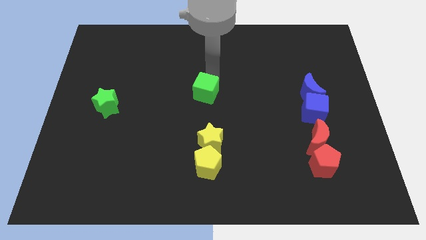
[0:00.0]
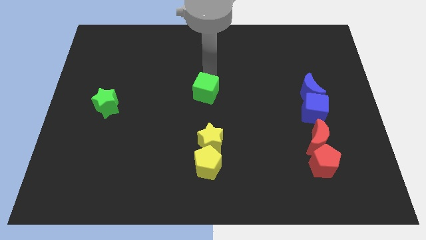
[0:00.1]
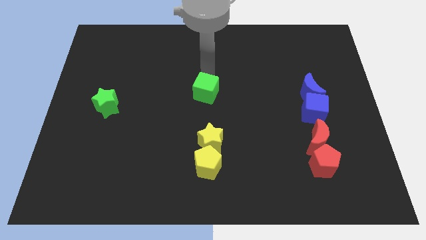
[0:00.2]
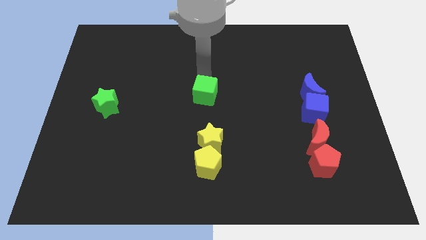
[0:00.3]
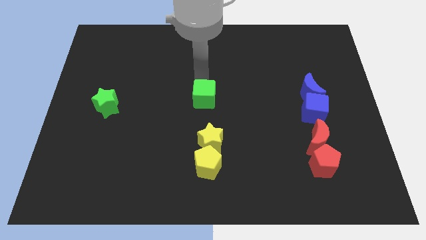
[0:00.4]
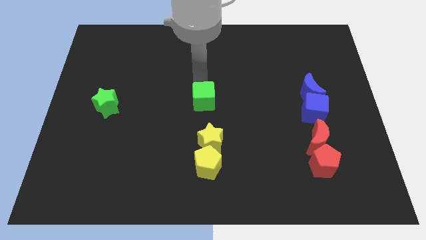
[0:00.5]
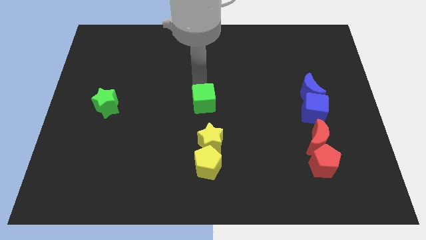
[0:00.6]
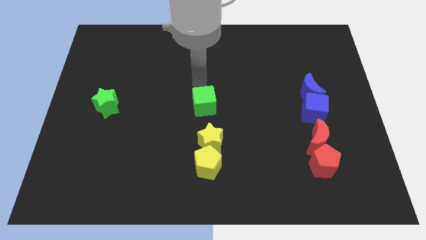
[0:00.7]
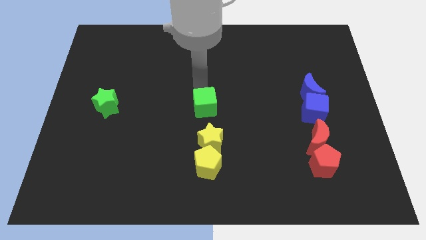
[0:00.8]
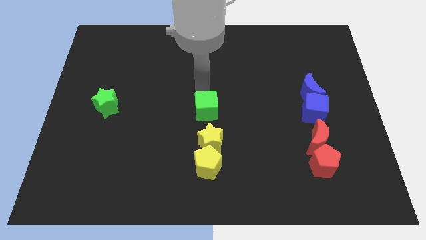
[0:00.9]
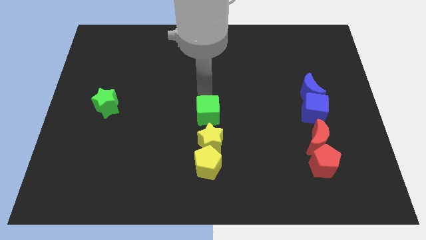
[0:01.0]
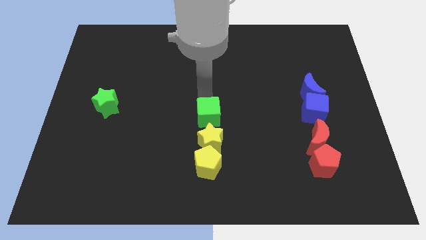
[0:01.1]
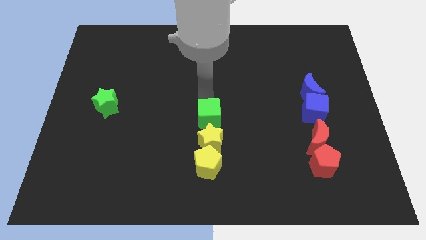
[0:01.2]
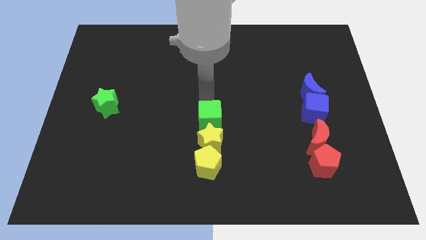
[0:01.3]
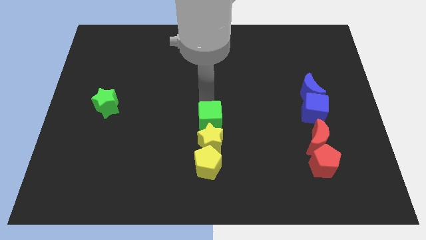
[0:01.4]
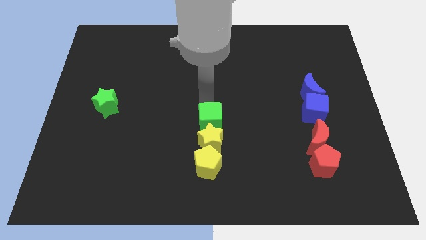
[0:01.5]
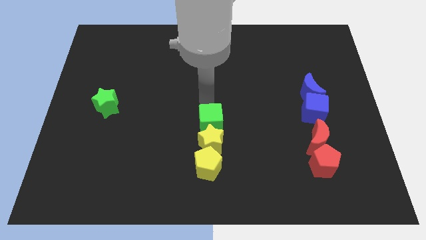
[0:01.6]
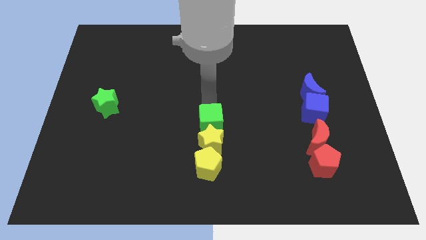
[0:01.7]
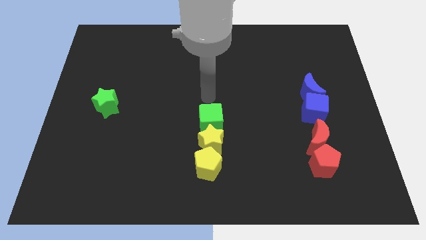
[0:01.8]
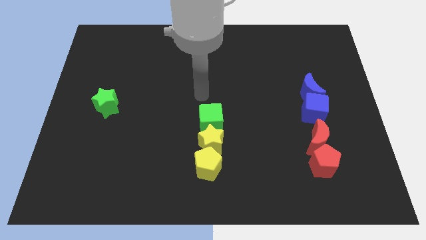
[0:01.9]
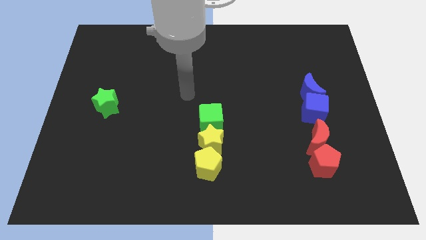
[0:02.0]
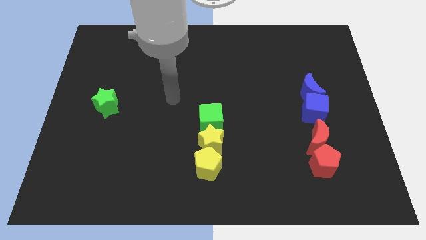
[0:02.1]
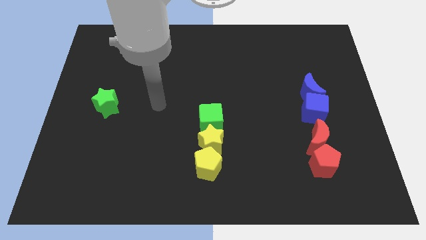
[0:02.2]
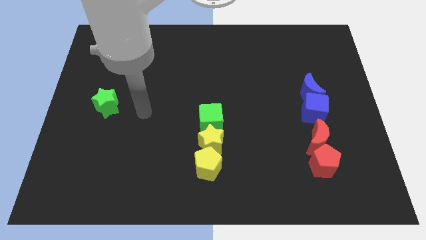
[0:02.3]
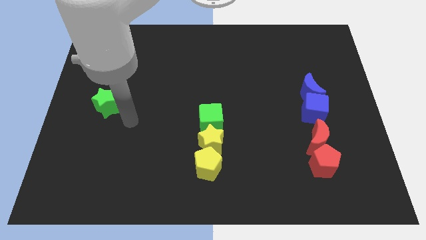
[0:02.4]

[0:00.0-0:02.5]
move the green cube near to the yellow star

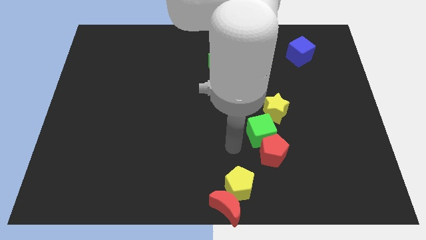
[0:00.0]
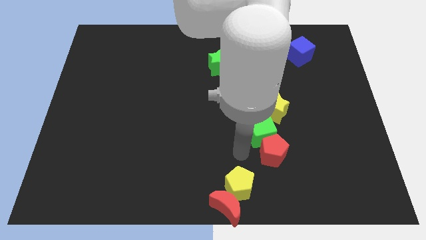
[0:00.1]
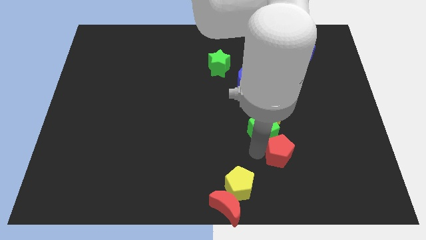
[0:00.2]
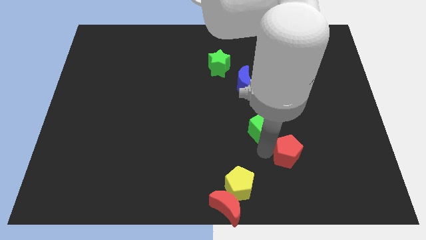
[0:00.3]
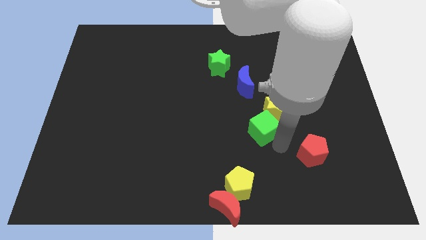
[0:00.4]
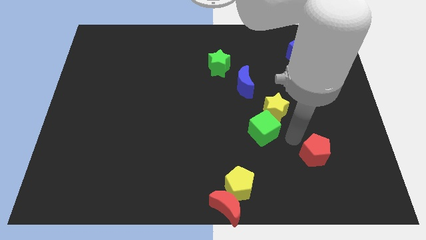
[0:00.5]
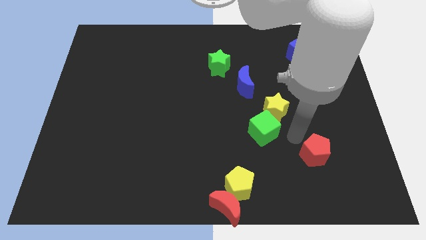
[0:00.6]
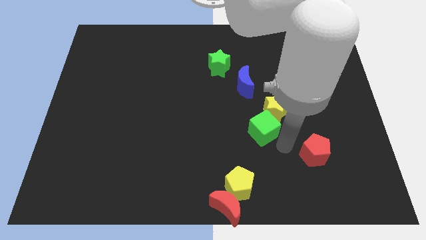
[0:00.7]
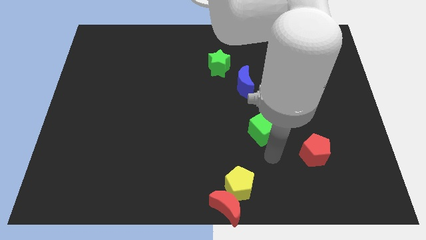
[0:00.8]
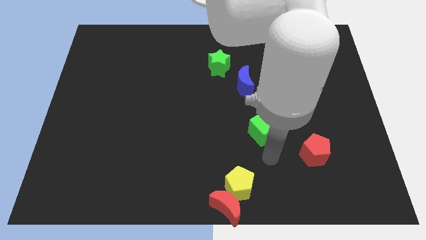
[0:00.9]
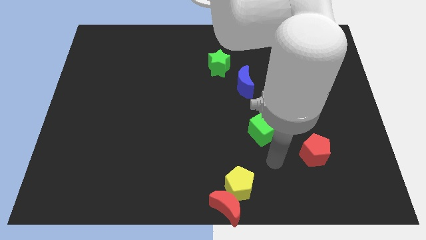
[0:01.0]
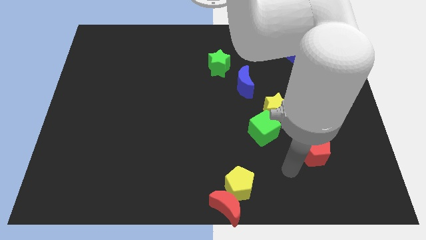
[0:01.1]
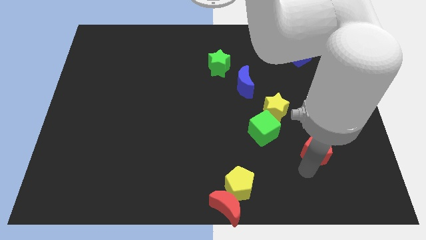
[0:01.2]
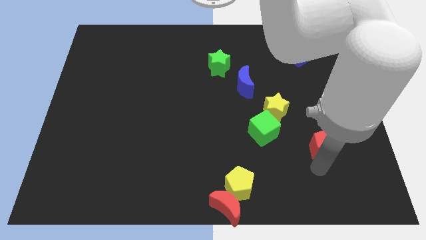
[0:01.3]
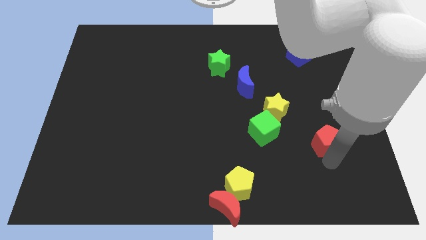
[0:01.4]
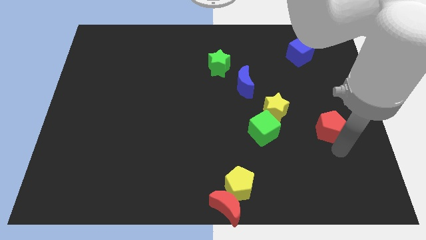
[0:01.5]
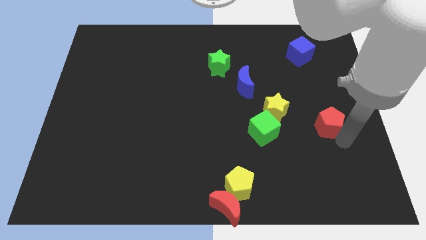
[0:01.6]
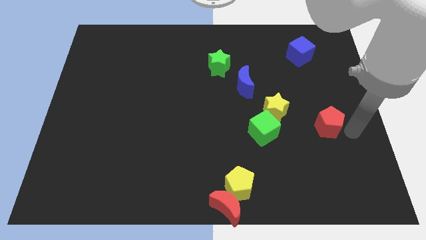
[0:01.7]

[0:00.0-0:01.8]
separate the red pentagon from green cube

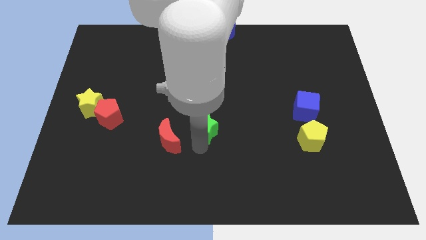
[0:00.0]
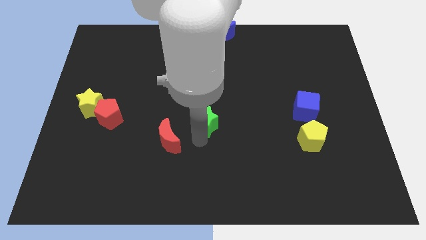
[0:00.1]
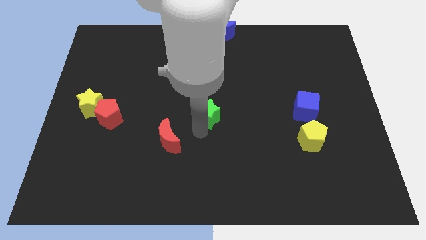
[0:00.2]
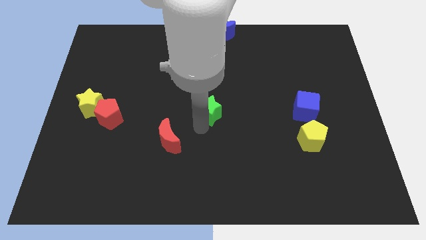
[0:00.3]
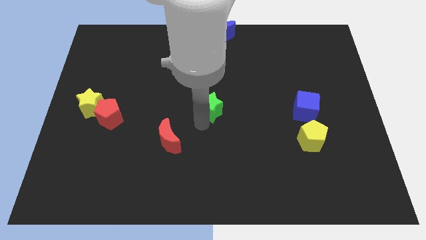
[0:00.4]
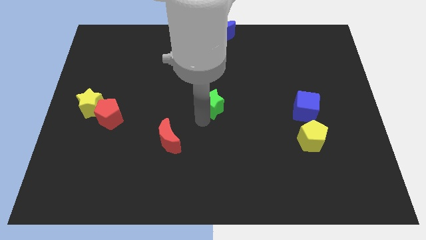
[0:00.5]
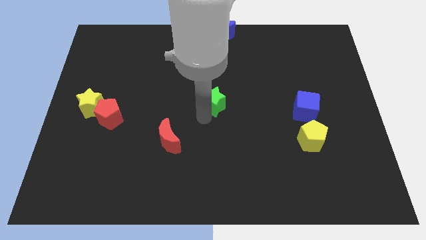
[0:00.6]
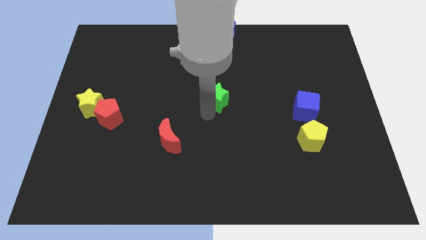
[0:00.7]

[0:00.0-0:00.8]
push green star upwards

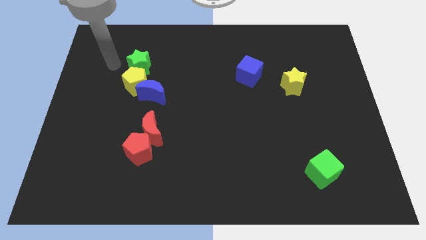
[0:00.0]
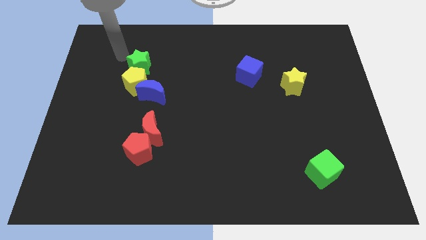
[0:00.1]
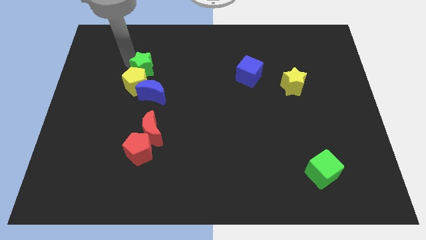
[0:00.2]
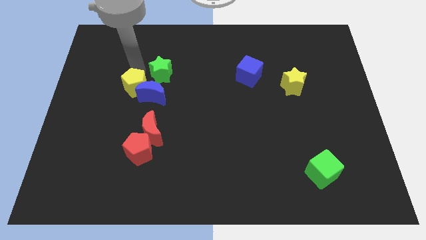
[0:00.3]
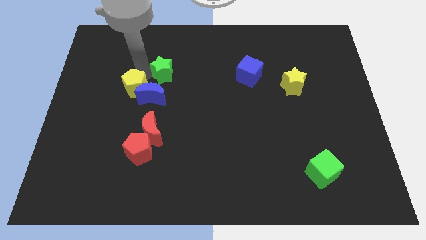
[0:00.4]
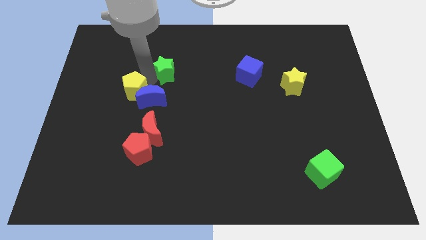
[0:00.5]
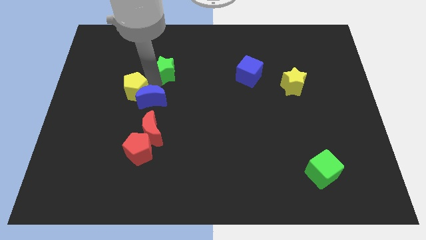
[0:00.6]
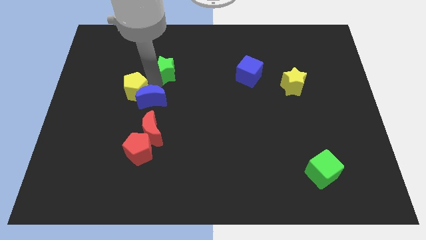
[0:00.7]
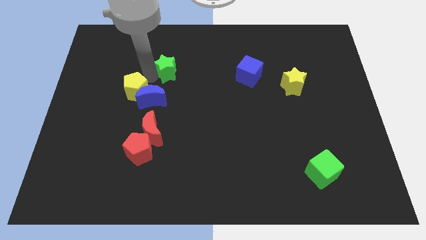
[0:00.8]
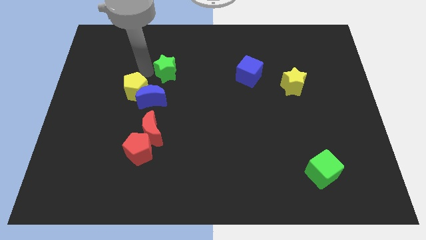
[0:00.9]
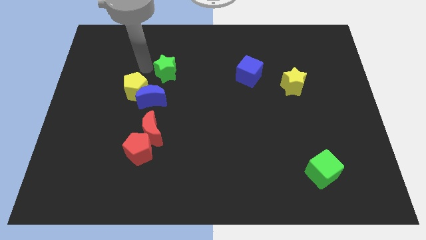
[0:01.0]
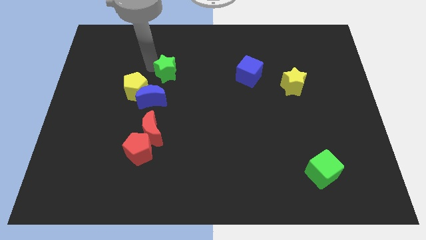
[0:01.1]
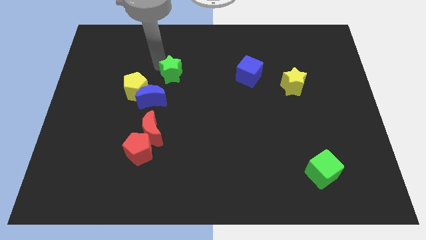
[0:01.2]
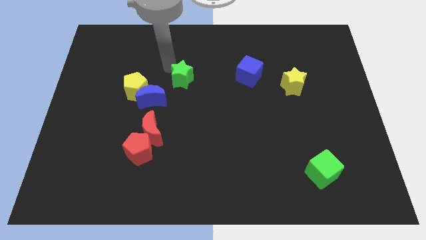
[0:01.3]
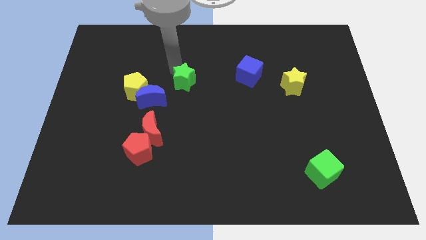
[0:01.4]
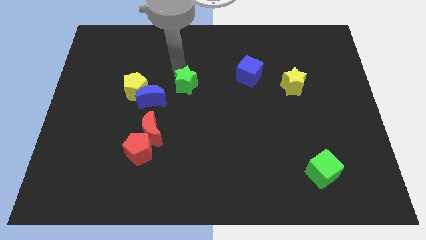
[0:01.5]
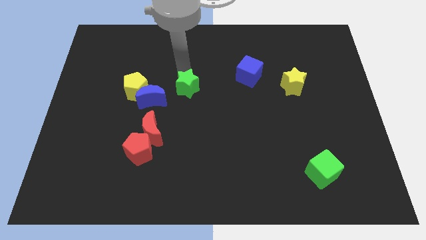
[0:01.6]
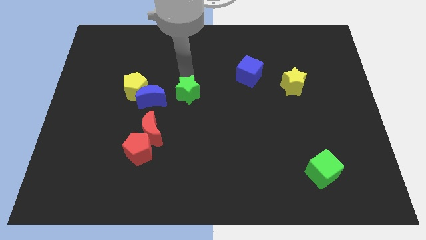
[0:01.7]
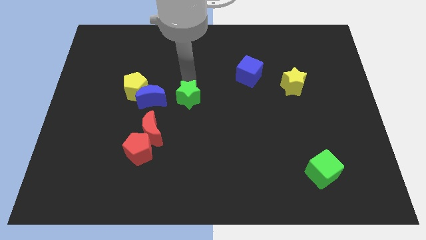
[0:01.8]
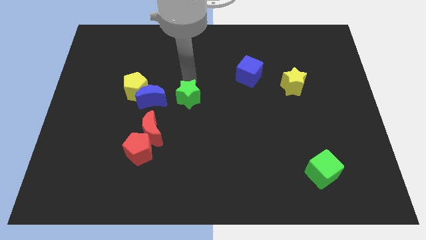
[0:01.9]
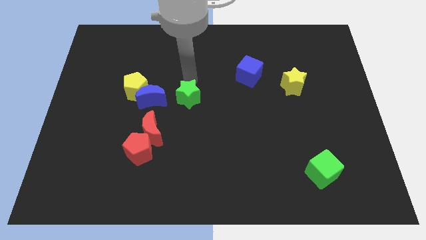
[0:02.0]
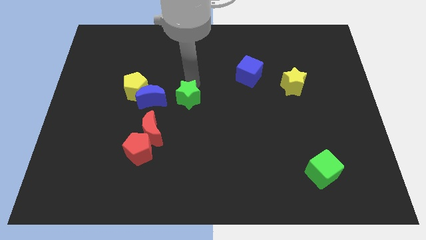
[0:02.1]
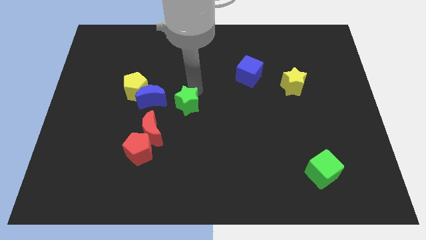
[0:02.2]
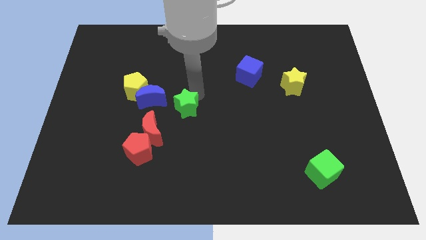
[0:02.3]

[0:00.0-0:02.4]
separate the green star and the yellow pentagon

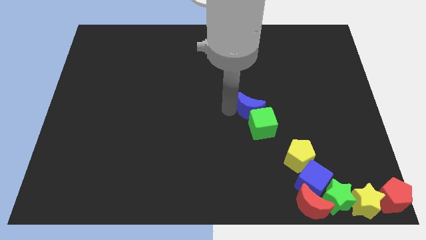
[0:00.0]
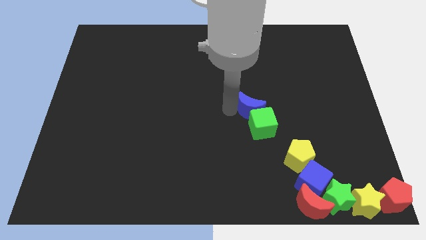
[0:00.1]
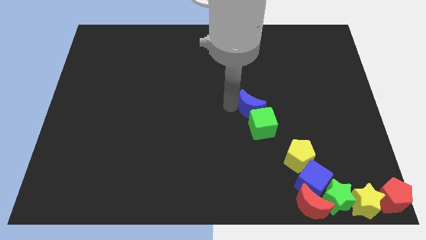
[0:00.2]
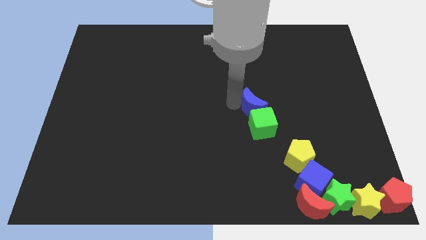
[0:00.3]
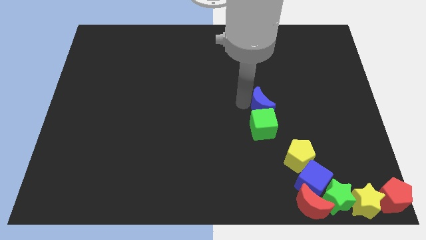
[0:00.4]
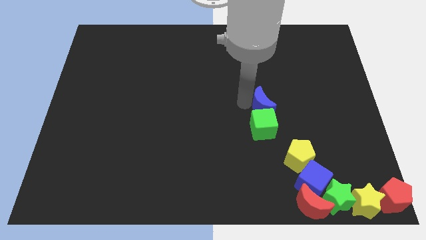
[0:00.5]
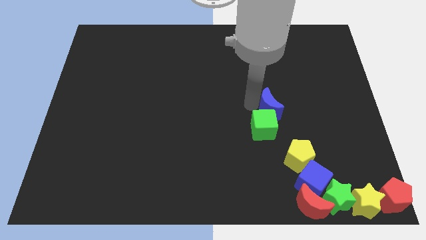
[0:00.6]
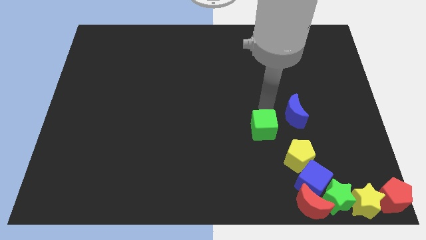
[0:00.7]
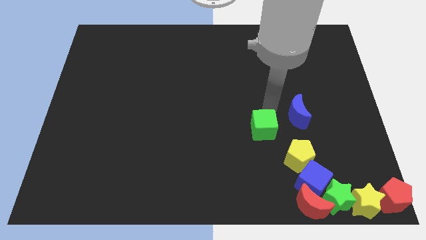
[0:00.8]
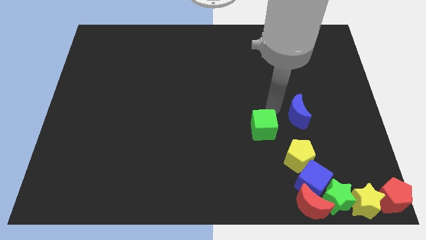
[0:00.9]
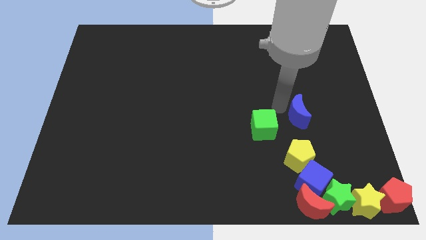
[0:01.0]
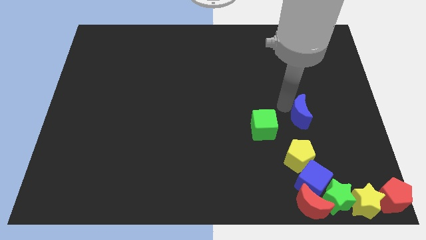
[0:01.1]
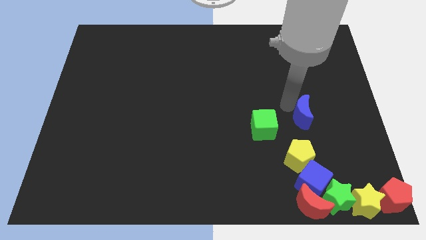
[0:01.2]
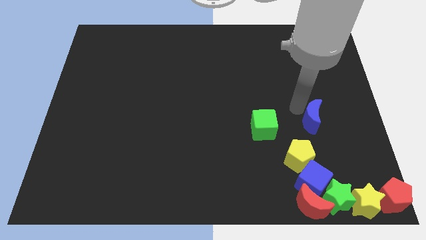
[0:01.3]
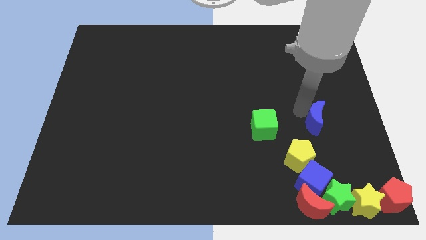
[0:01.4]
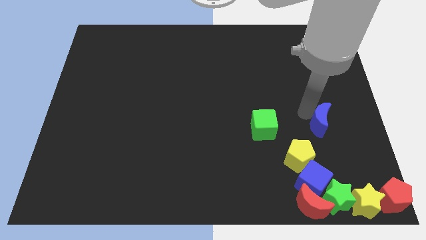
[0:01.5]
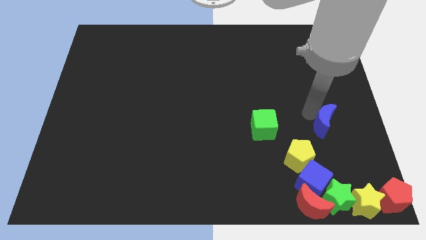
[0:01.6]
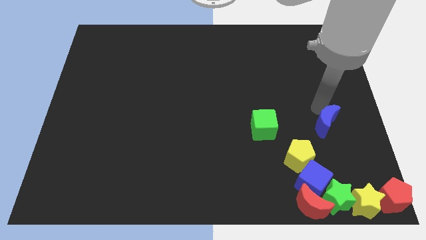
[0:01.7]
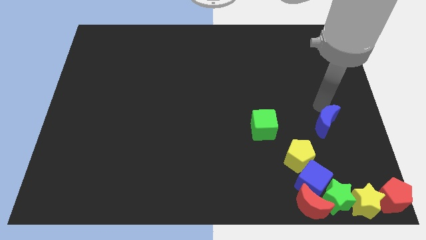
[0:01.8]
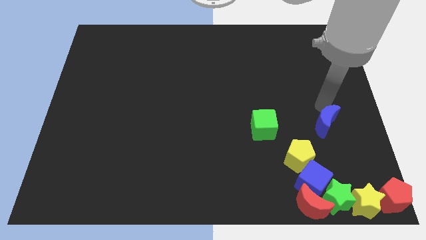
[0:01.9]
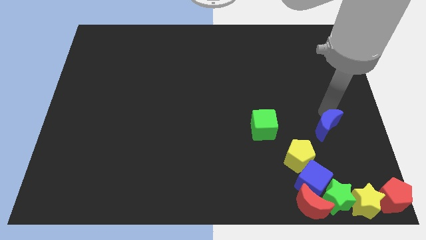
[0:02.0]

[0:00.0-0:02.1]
move the blue moon to the right of the green cube
